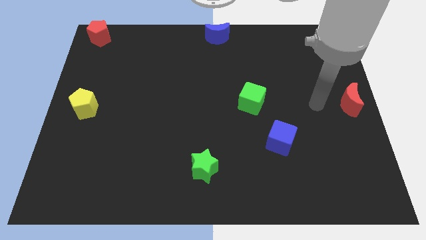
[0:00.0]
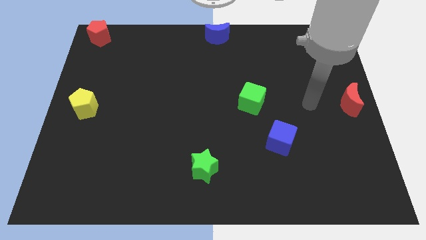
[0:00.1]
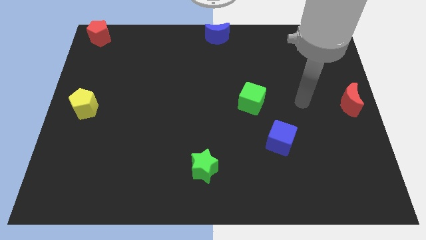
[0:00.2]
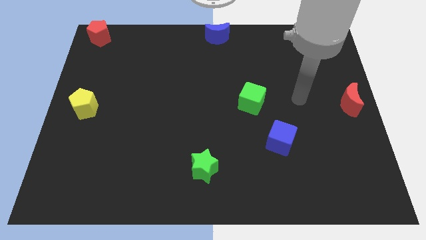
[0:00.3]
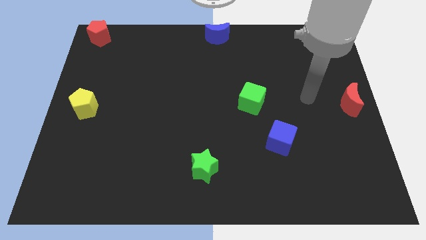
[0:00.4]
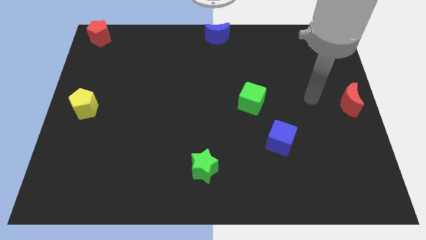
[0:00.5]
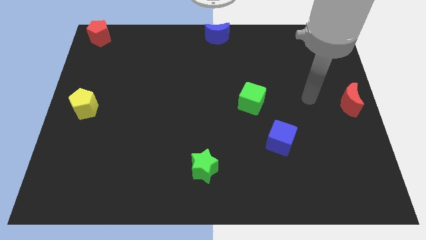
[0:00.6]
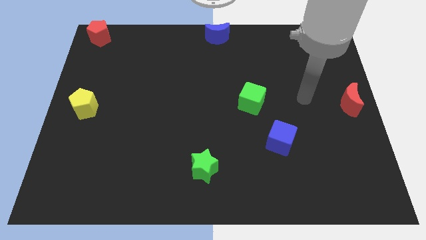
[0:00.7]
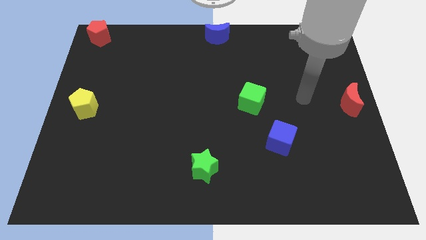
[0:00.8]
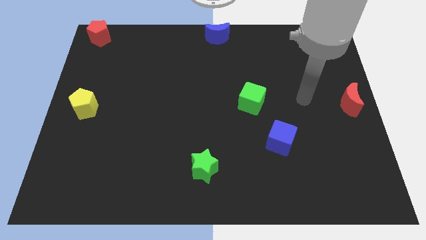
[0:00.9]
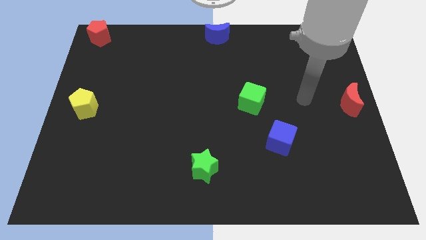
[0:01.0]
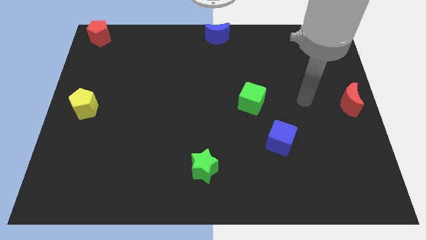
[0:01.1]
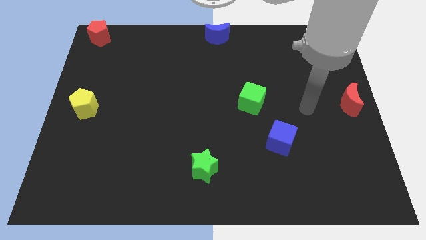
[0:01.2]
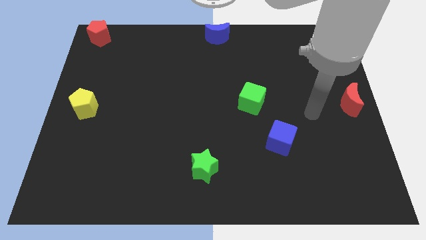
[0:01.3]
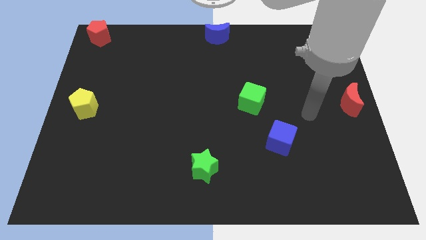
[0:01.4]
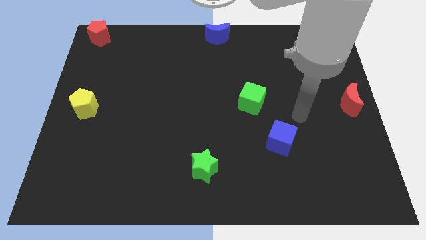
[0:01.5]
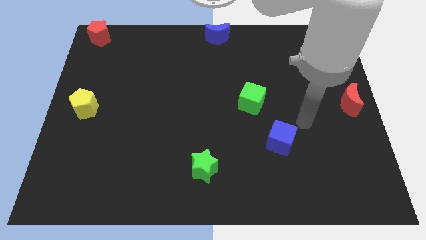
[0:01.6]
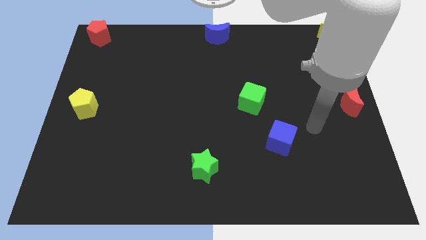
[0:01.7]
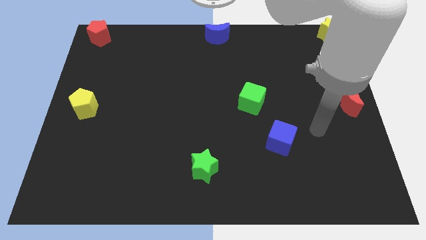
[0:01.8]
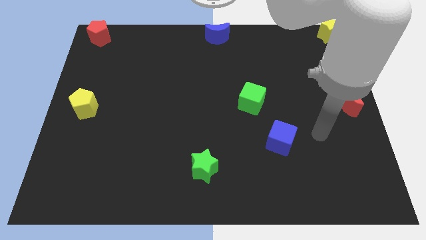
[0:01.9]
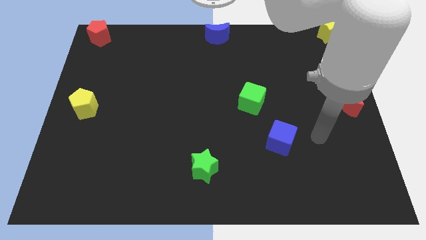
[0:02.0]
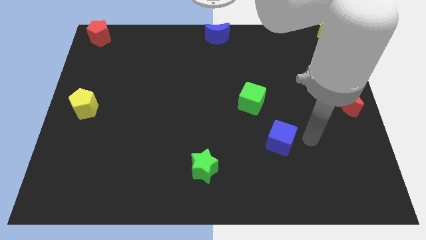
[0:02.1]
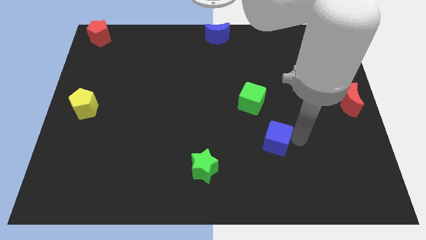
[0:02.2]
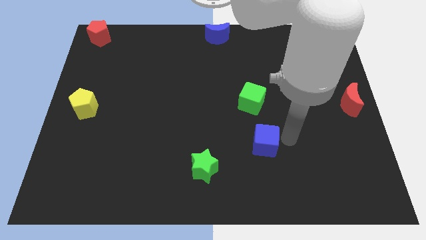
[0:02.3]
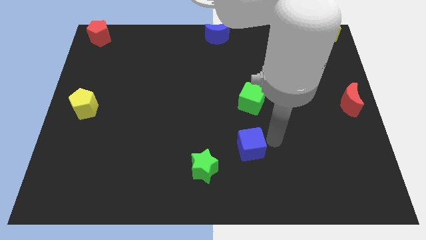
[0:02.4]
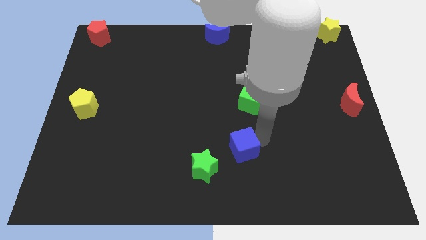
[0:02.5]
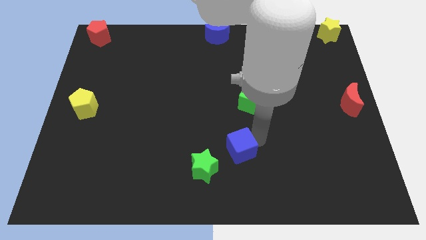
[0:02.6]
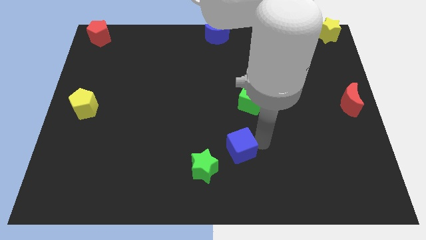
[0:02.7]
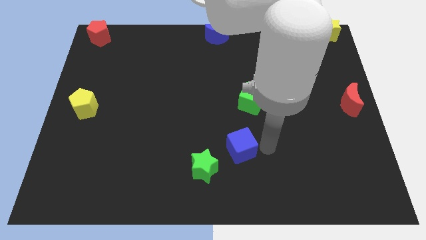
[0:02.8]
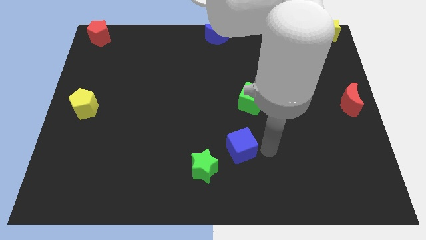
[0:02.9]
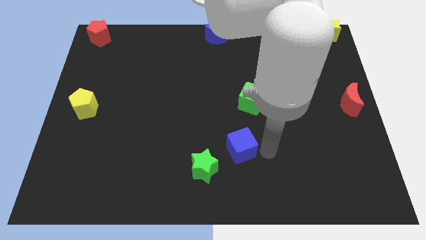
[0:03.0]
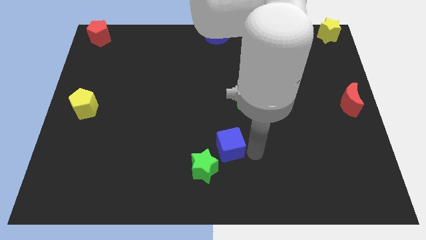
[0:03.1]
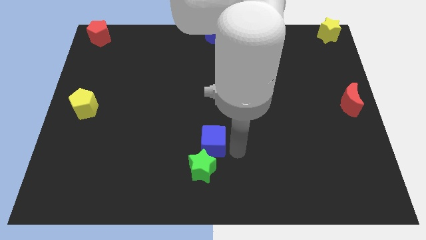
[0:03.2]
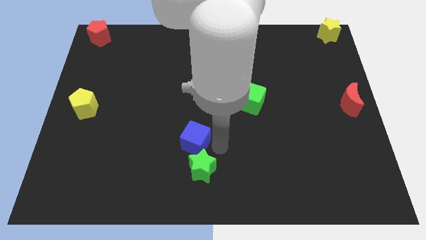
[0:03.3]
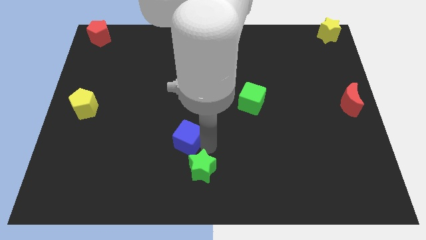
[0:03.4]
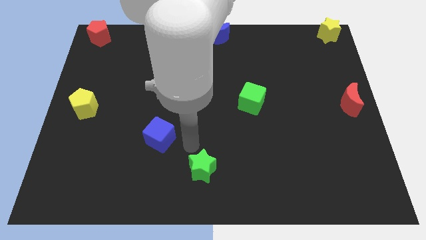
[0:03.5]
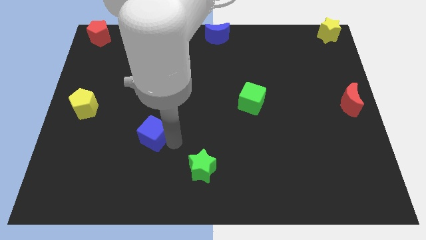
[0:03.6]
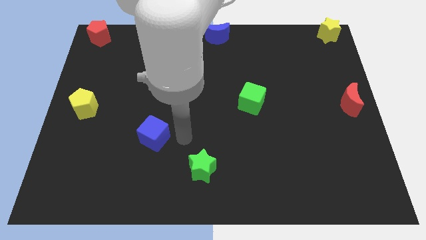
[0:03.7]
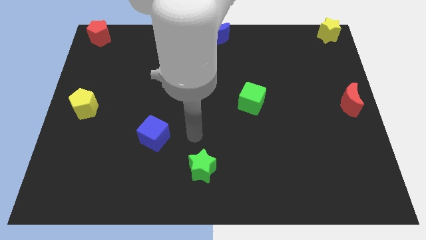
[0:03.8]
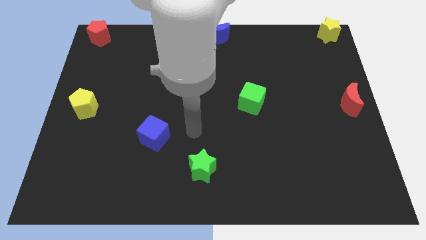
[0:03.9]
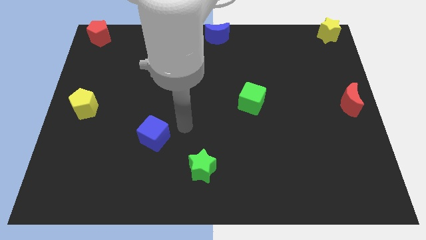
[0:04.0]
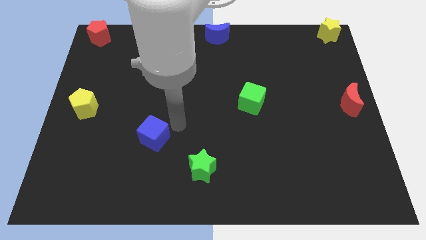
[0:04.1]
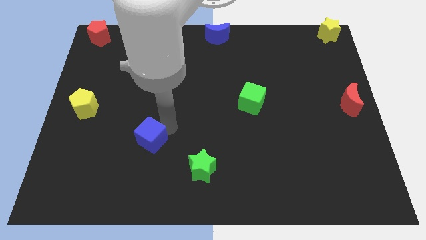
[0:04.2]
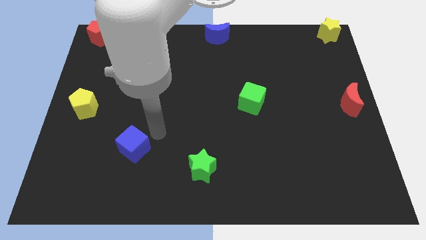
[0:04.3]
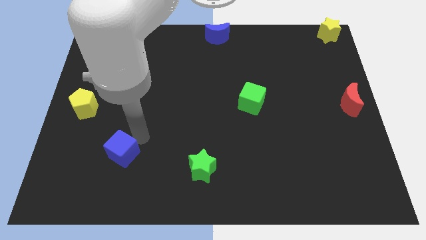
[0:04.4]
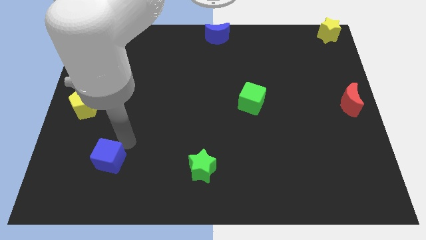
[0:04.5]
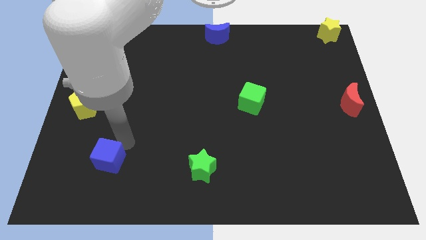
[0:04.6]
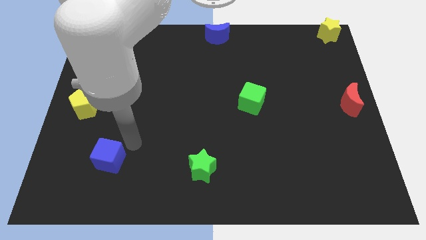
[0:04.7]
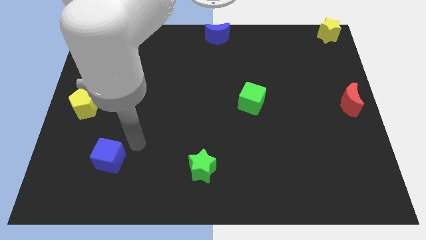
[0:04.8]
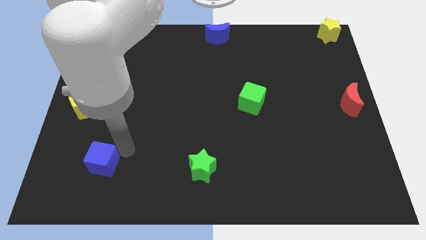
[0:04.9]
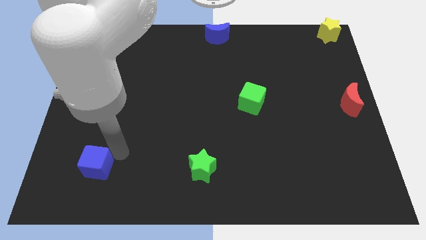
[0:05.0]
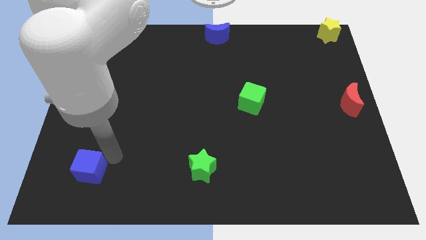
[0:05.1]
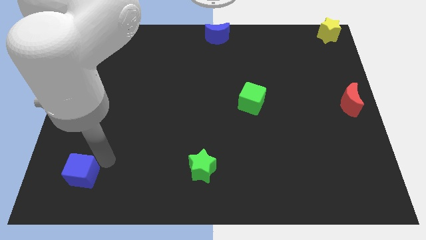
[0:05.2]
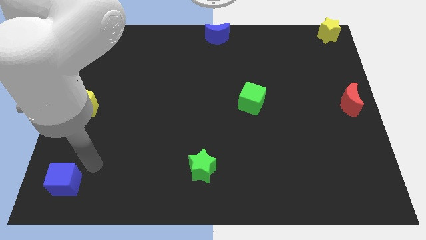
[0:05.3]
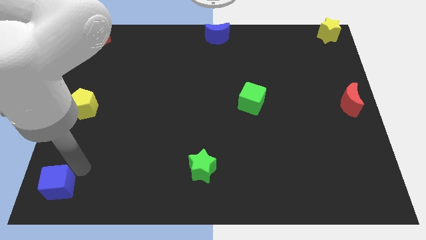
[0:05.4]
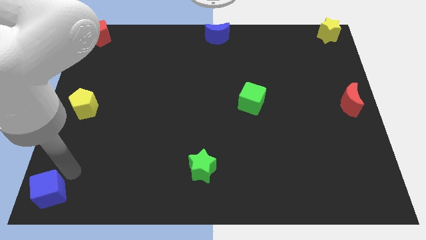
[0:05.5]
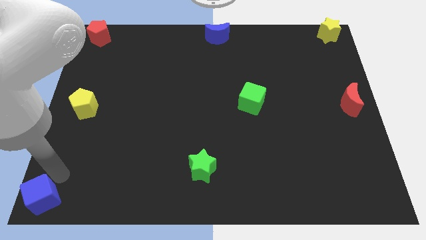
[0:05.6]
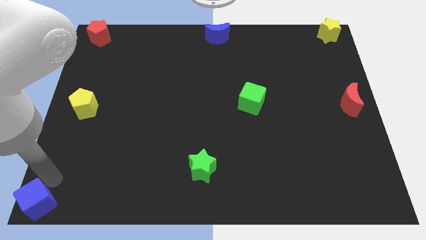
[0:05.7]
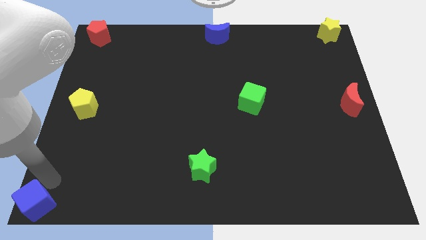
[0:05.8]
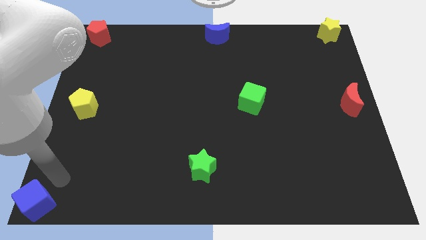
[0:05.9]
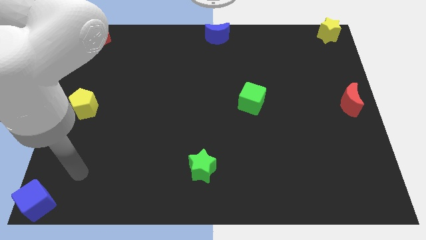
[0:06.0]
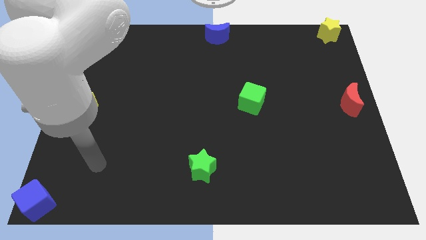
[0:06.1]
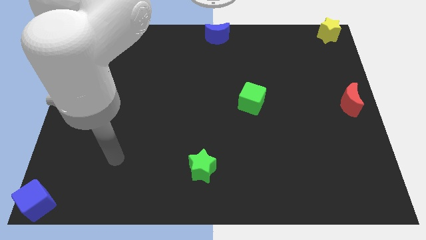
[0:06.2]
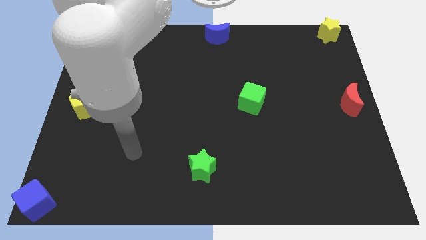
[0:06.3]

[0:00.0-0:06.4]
push the blue cube towards the left bottom corner of the board

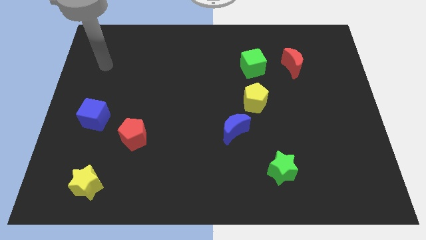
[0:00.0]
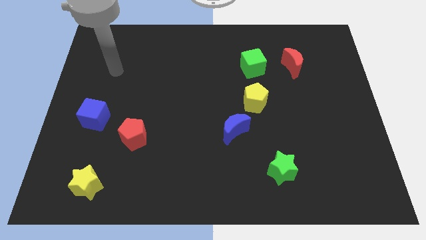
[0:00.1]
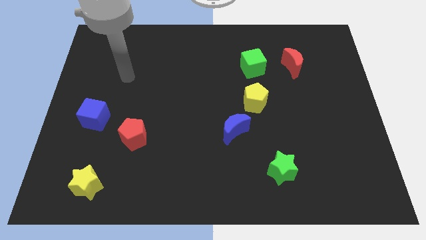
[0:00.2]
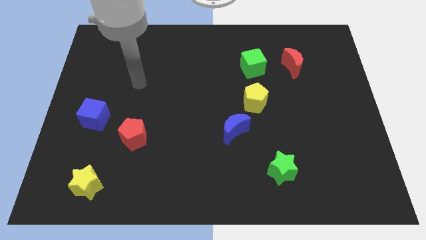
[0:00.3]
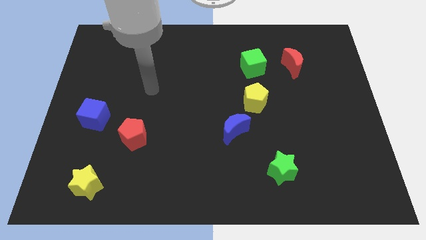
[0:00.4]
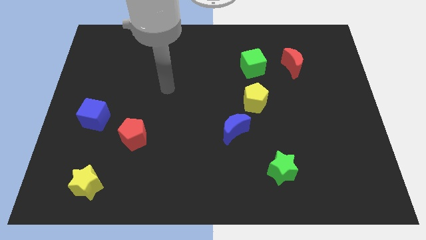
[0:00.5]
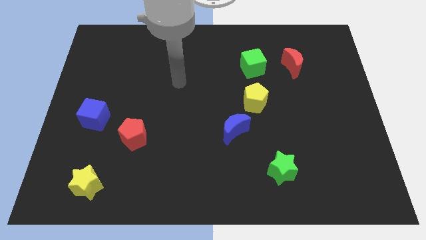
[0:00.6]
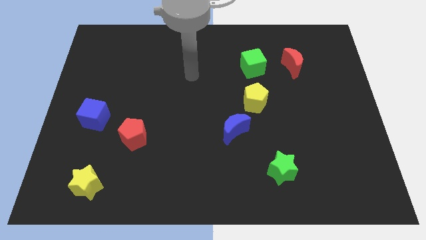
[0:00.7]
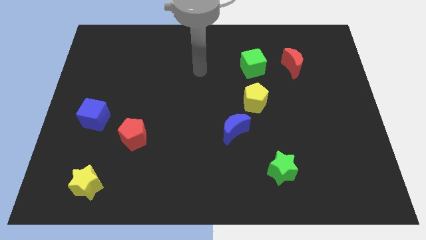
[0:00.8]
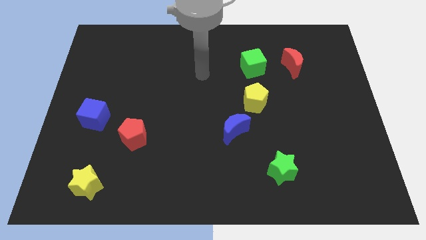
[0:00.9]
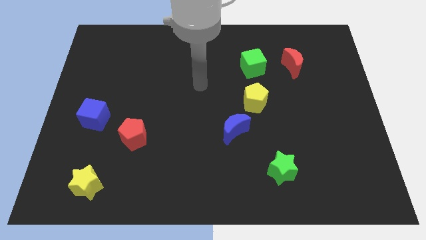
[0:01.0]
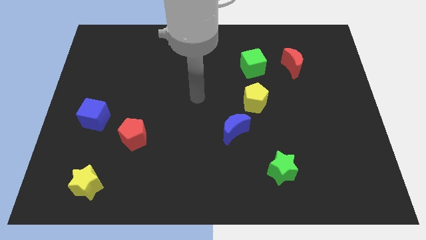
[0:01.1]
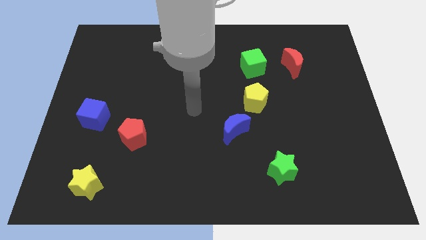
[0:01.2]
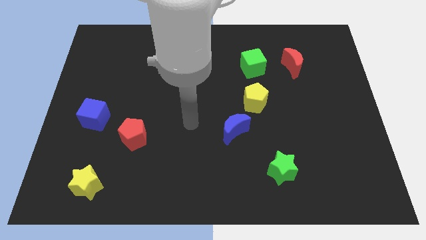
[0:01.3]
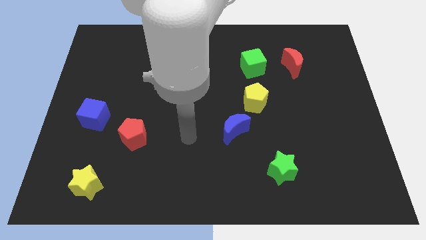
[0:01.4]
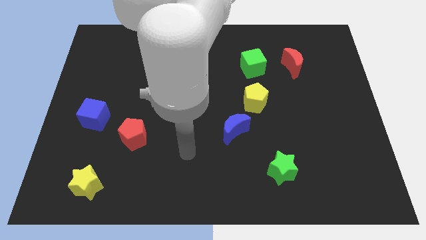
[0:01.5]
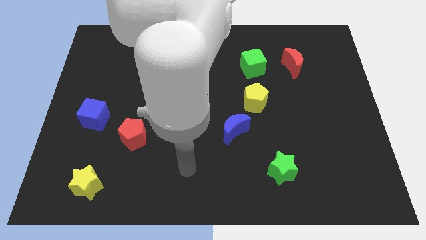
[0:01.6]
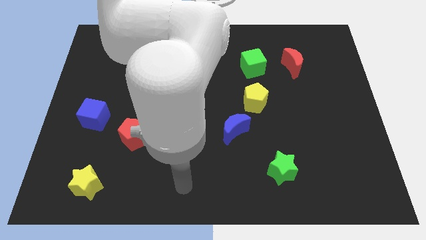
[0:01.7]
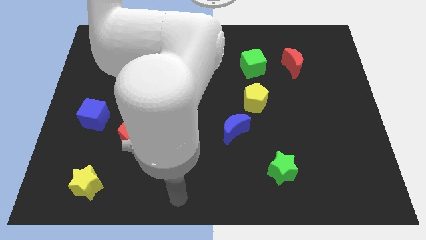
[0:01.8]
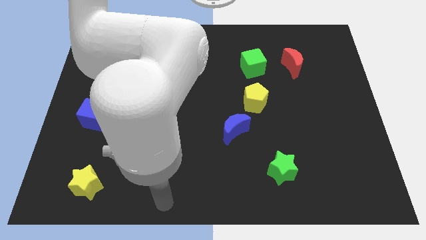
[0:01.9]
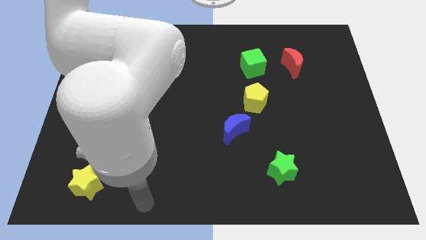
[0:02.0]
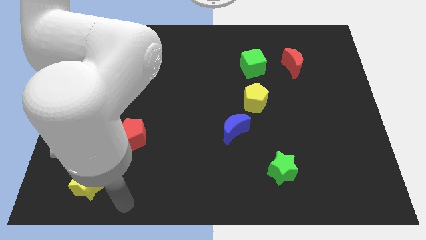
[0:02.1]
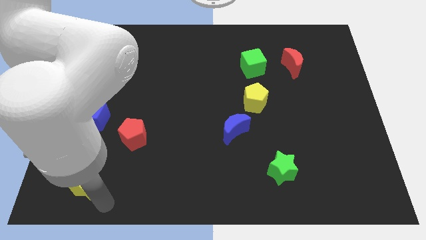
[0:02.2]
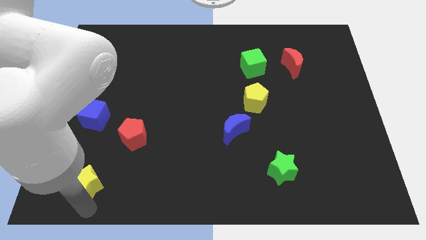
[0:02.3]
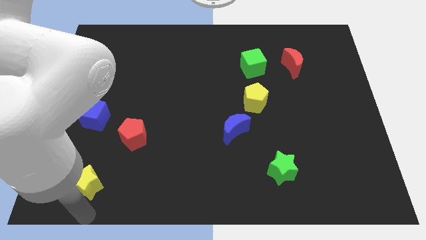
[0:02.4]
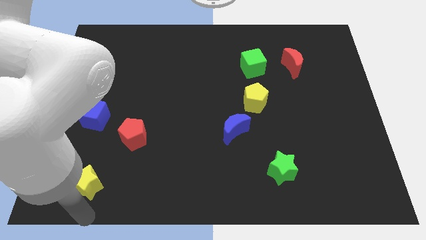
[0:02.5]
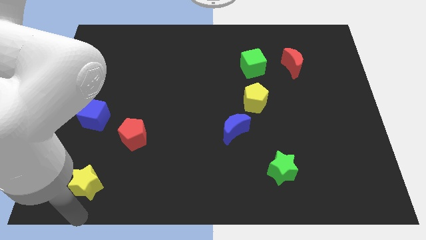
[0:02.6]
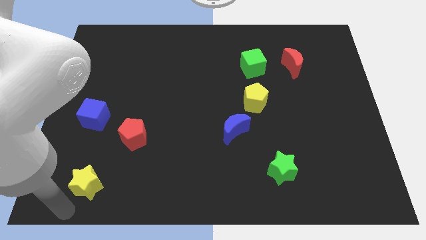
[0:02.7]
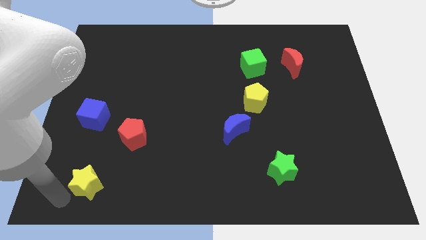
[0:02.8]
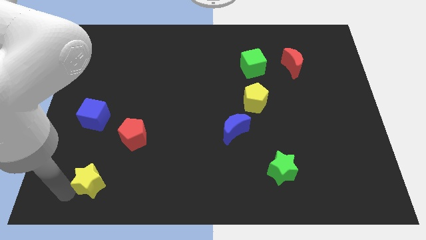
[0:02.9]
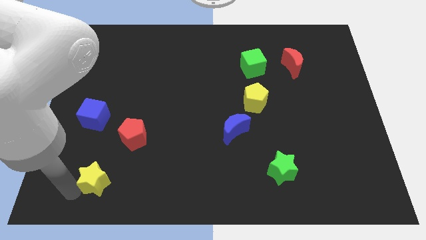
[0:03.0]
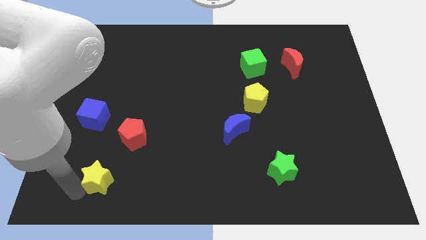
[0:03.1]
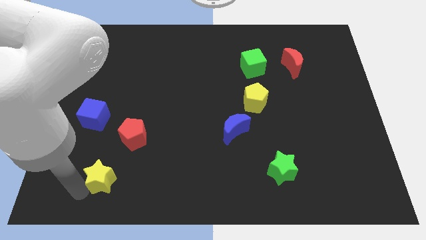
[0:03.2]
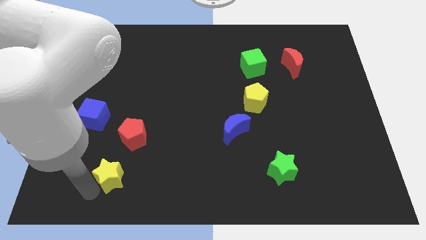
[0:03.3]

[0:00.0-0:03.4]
push the yellow star towards the red pentagon
